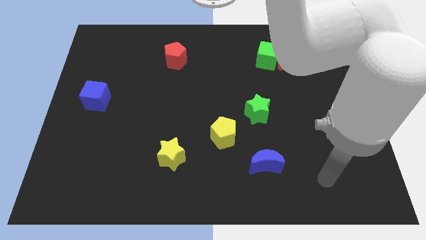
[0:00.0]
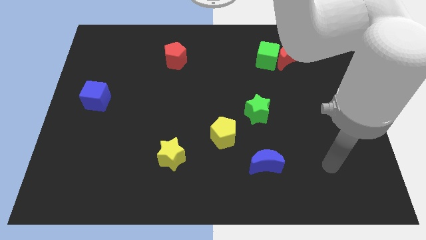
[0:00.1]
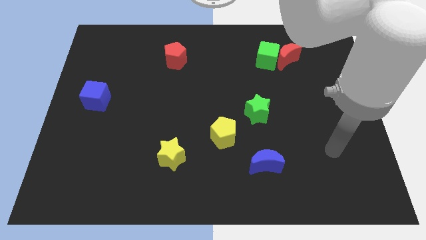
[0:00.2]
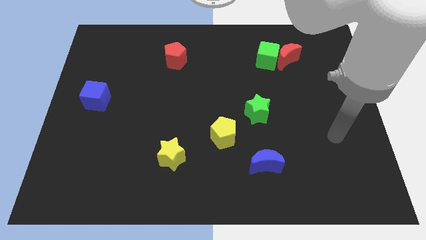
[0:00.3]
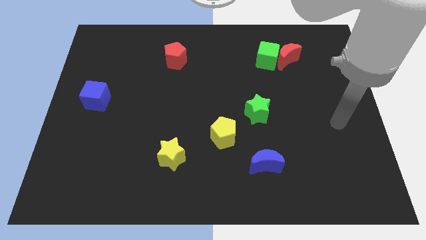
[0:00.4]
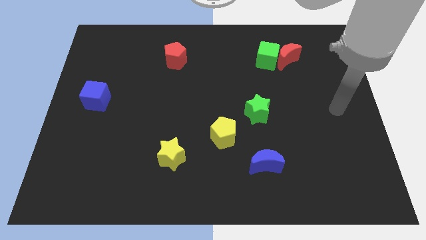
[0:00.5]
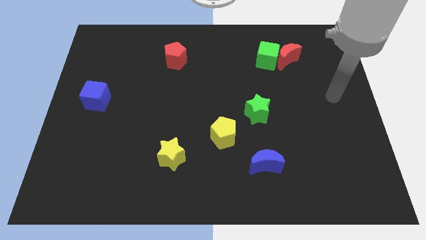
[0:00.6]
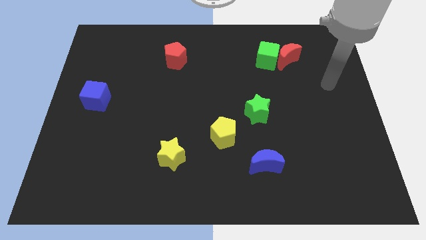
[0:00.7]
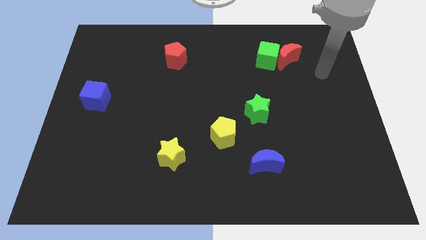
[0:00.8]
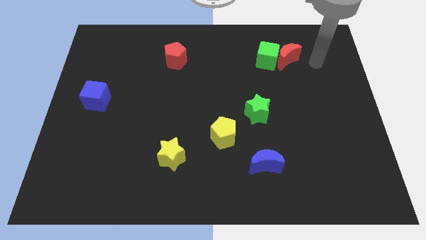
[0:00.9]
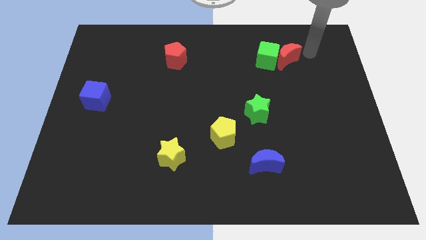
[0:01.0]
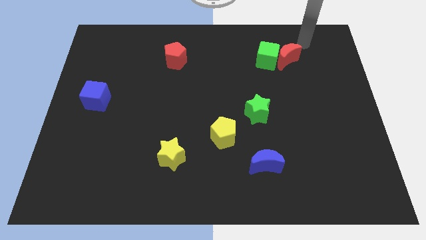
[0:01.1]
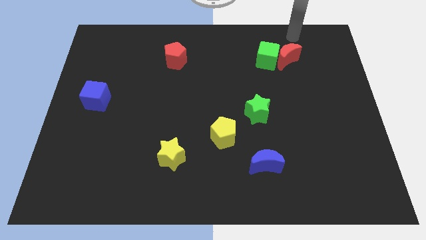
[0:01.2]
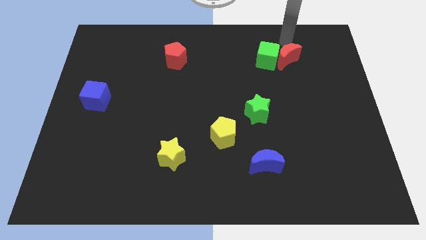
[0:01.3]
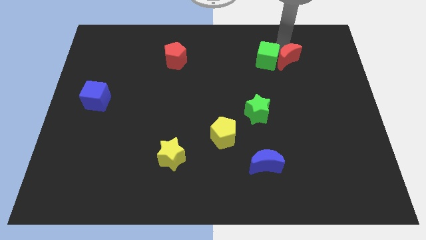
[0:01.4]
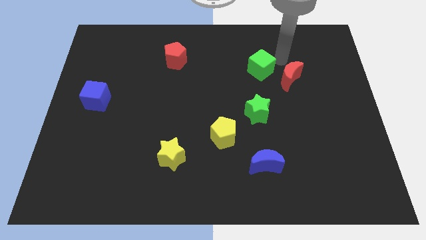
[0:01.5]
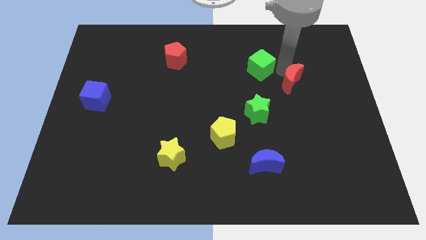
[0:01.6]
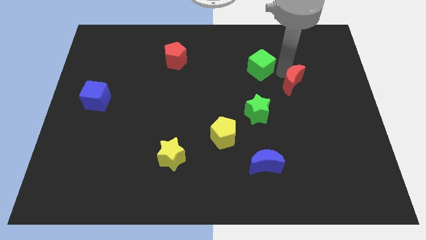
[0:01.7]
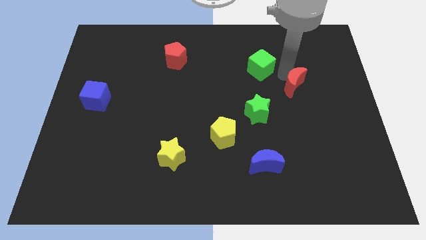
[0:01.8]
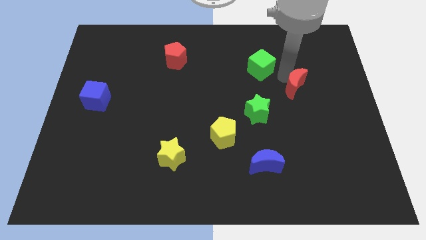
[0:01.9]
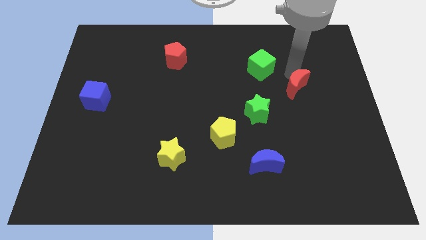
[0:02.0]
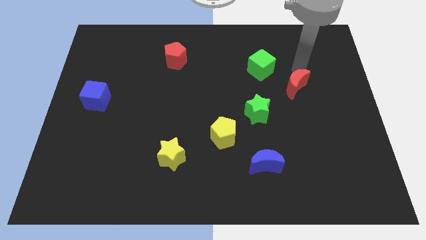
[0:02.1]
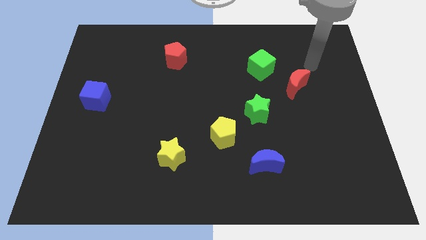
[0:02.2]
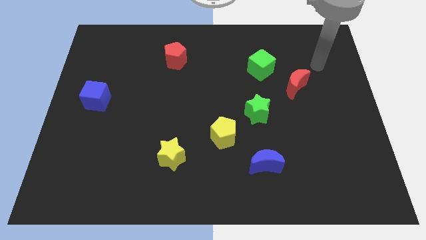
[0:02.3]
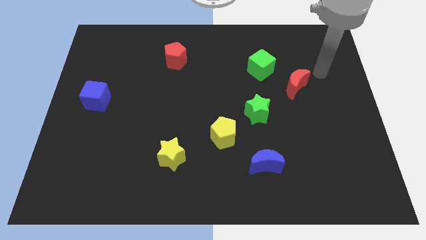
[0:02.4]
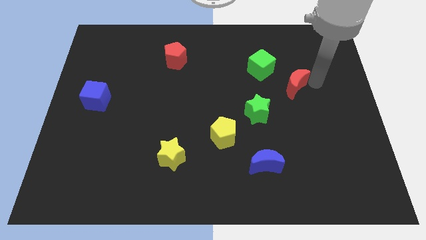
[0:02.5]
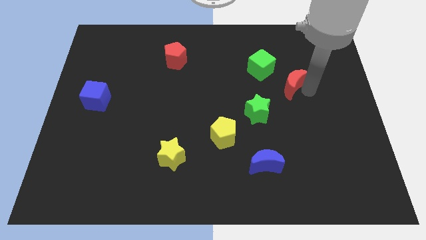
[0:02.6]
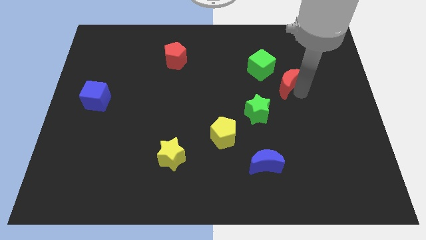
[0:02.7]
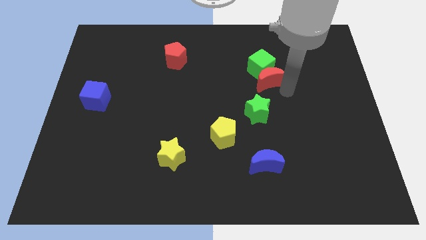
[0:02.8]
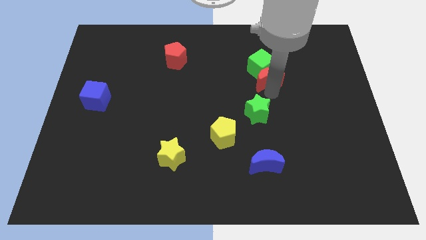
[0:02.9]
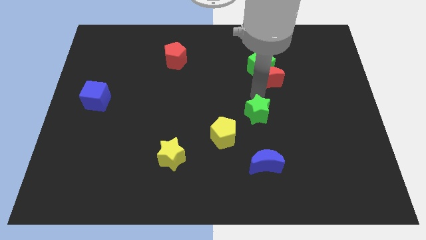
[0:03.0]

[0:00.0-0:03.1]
push the red crescent to the bottom of the green cube

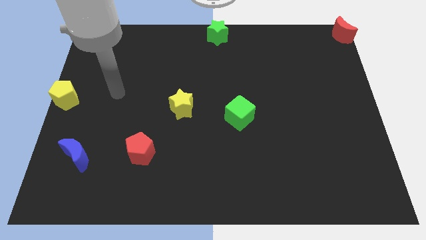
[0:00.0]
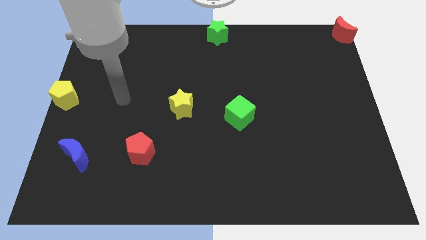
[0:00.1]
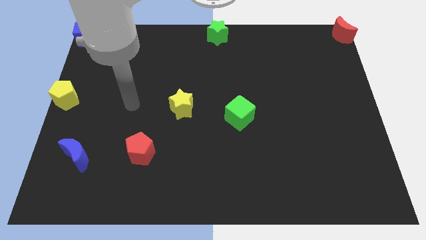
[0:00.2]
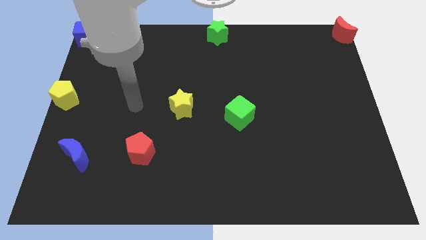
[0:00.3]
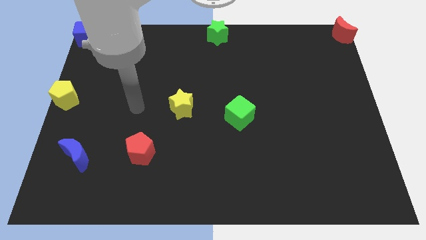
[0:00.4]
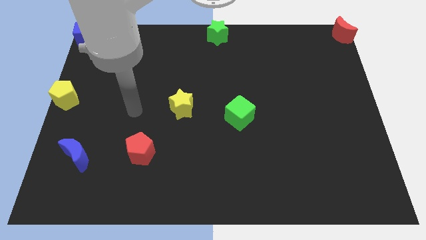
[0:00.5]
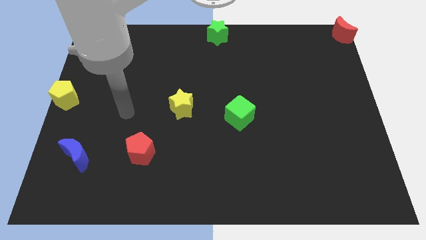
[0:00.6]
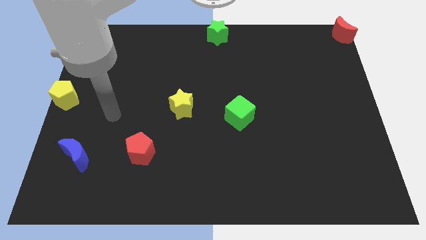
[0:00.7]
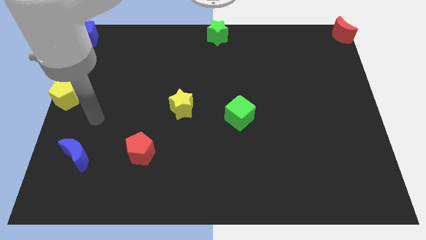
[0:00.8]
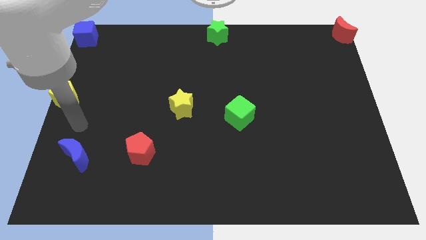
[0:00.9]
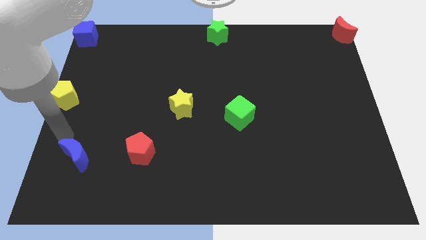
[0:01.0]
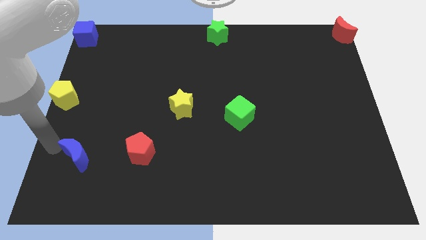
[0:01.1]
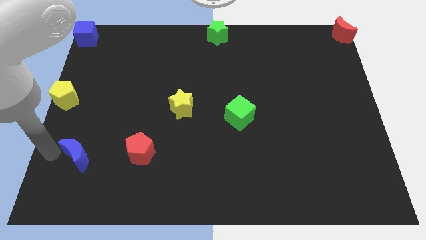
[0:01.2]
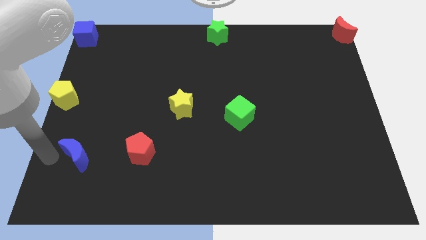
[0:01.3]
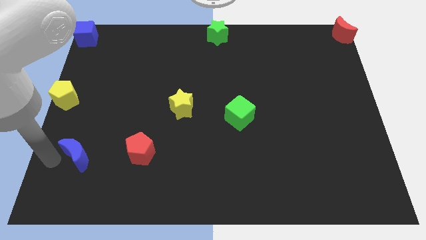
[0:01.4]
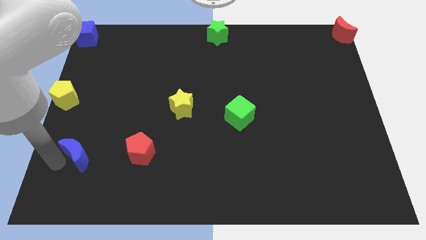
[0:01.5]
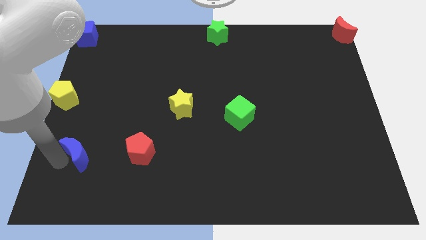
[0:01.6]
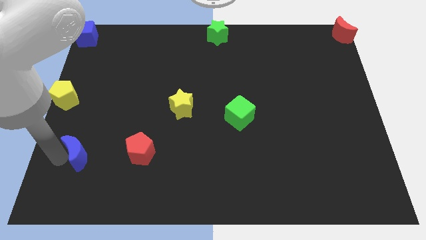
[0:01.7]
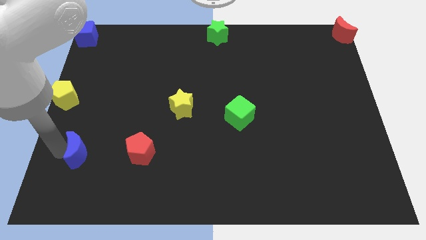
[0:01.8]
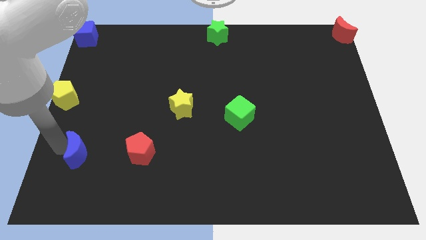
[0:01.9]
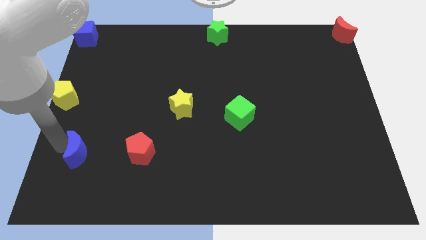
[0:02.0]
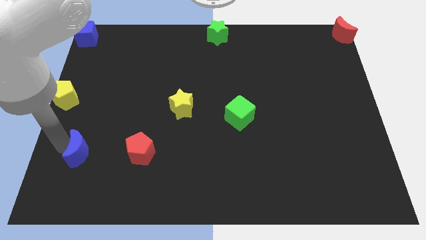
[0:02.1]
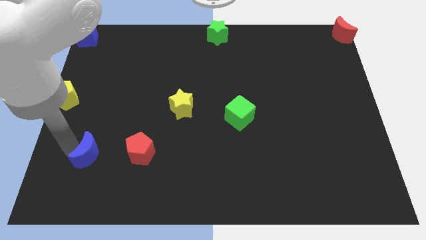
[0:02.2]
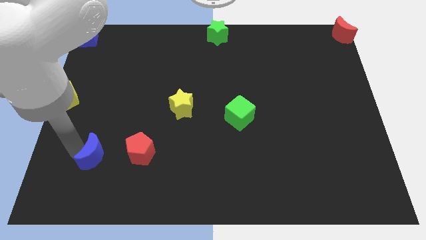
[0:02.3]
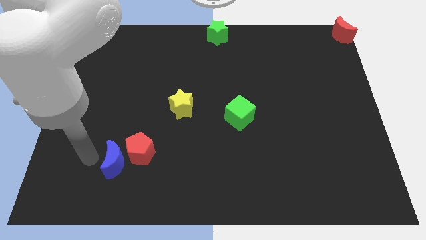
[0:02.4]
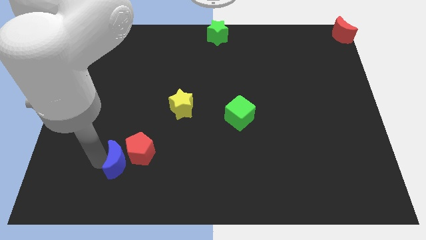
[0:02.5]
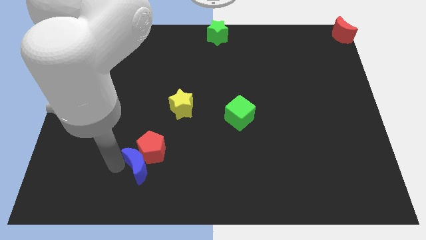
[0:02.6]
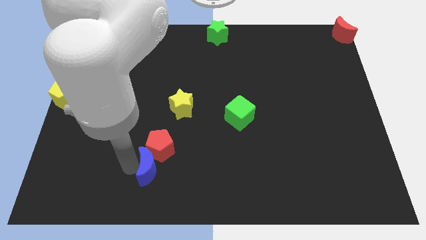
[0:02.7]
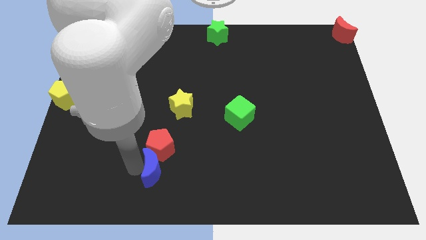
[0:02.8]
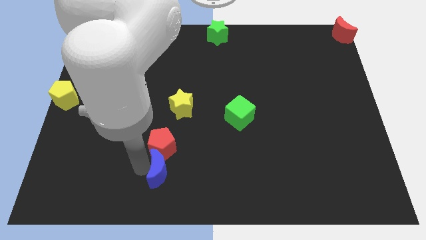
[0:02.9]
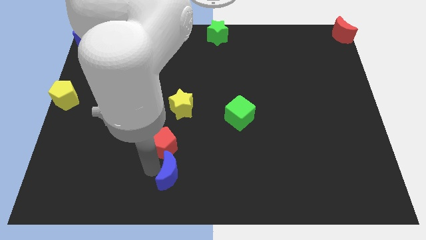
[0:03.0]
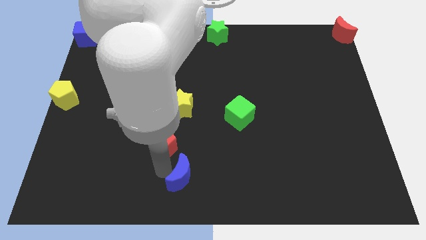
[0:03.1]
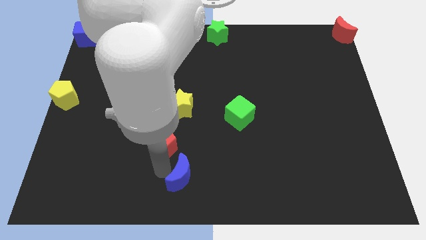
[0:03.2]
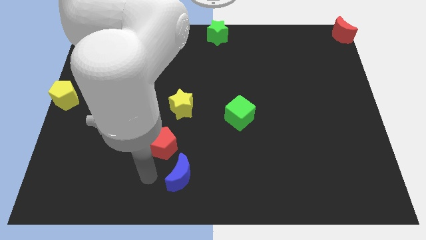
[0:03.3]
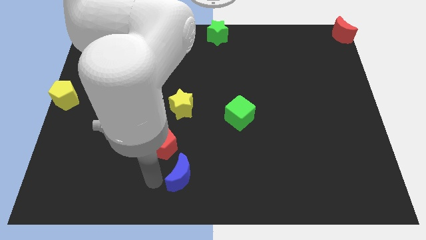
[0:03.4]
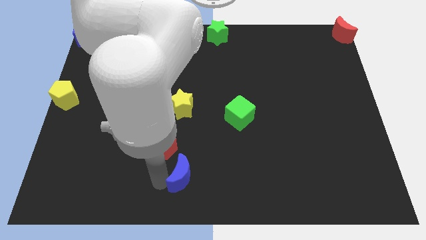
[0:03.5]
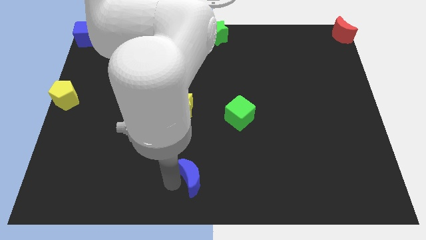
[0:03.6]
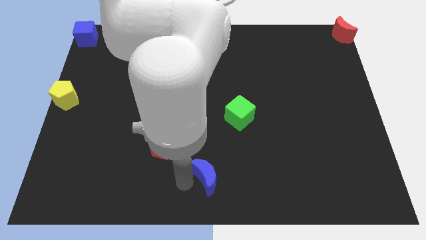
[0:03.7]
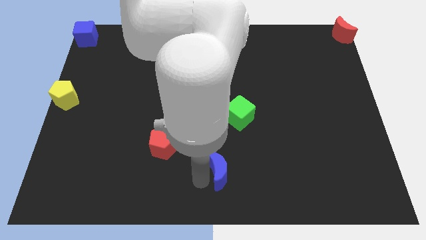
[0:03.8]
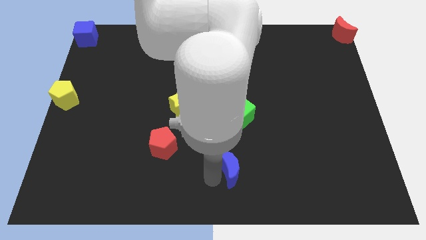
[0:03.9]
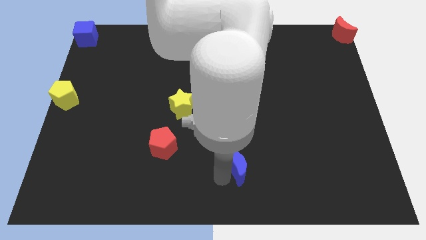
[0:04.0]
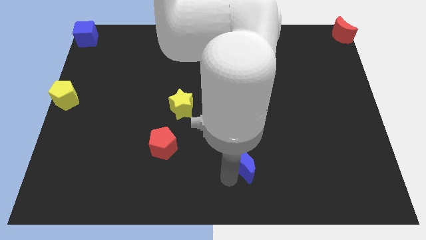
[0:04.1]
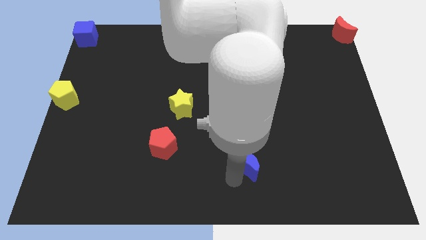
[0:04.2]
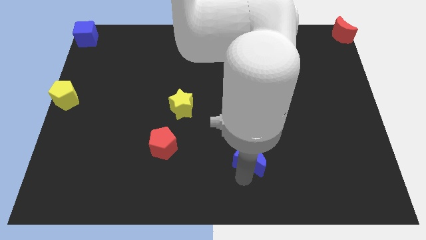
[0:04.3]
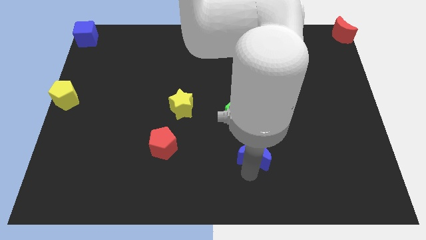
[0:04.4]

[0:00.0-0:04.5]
move blue moon below the green cube

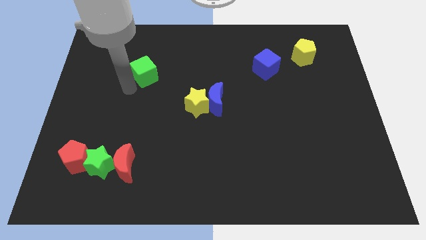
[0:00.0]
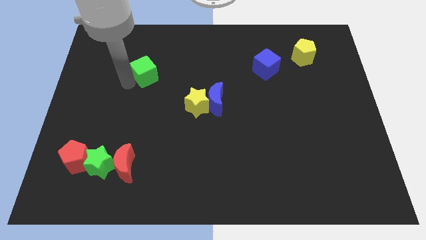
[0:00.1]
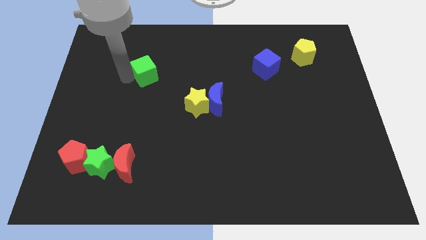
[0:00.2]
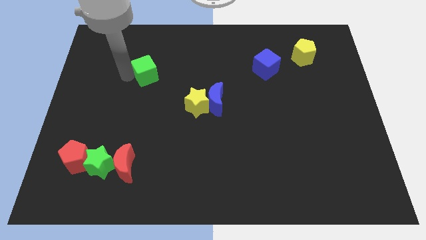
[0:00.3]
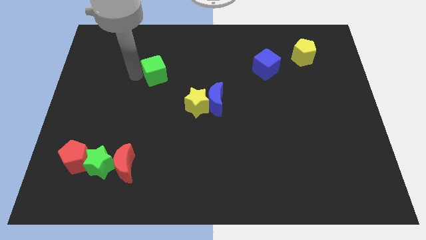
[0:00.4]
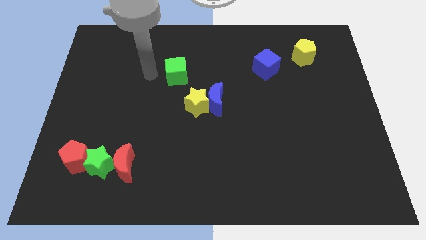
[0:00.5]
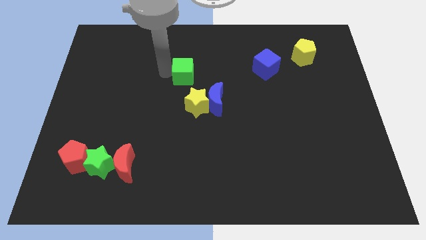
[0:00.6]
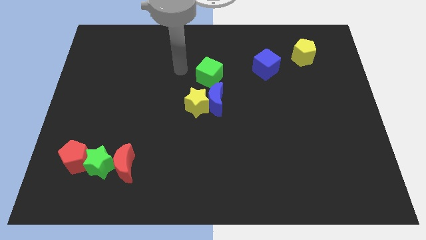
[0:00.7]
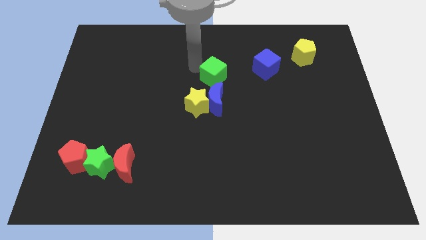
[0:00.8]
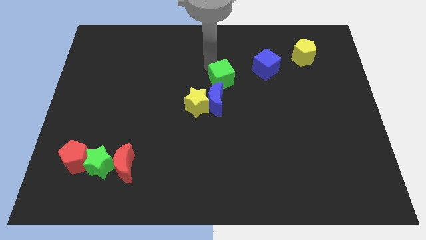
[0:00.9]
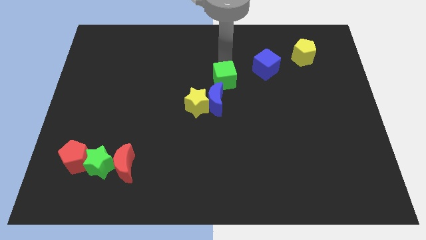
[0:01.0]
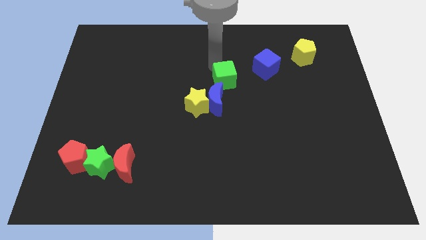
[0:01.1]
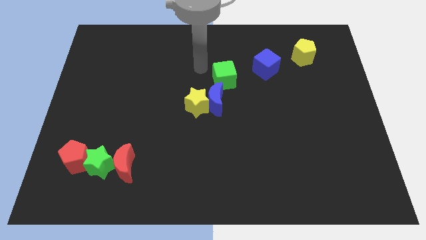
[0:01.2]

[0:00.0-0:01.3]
move the green cube towards right

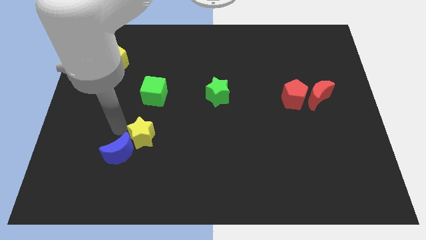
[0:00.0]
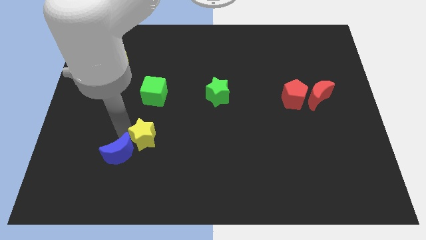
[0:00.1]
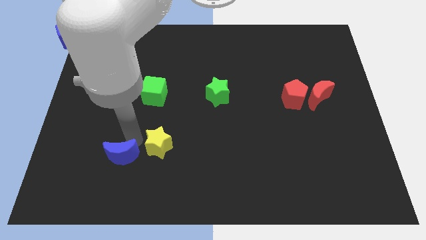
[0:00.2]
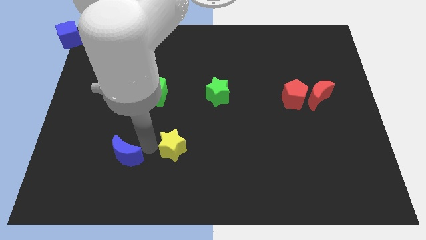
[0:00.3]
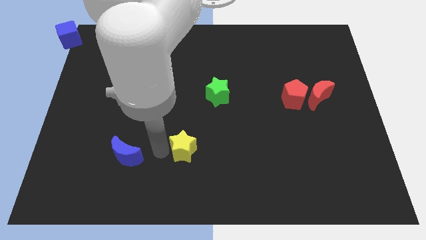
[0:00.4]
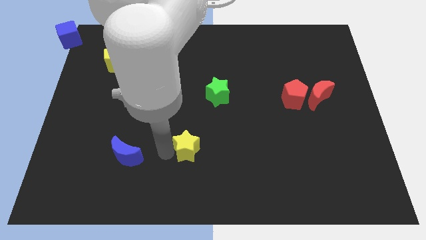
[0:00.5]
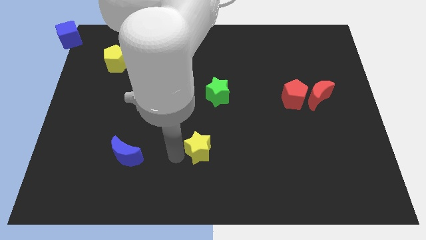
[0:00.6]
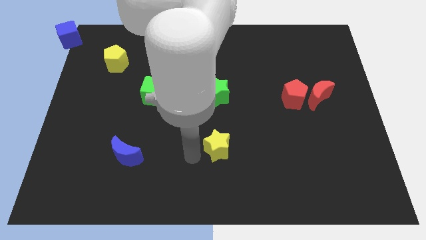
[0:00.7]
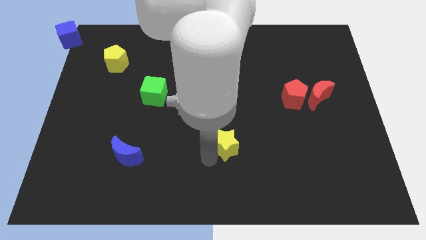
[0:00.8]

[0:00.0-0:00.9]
separate the yellow star and the blue crescent
